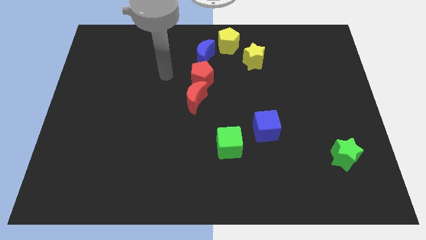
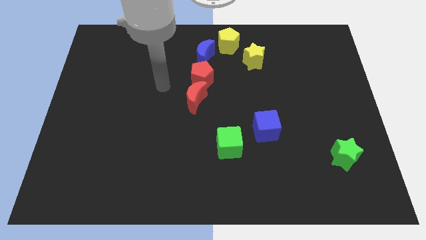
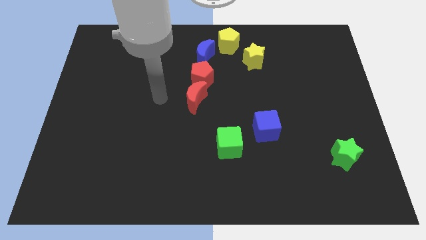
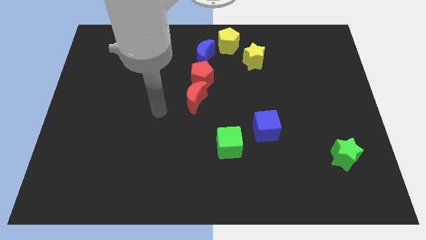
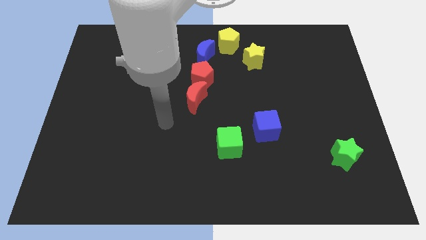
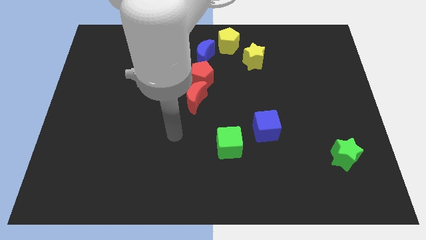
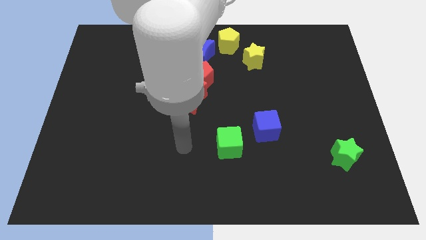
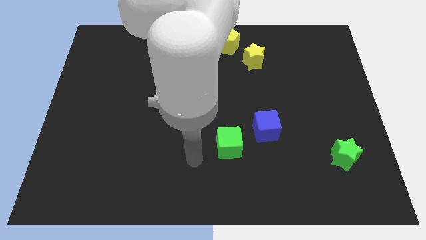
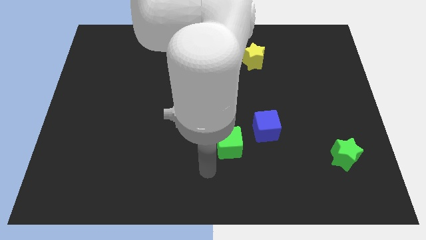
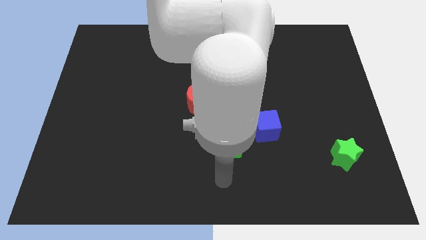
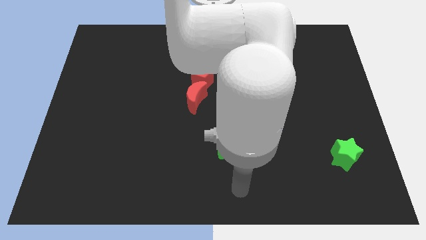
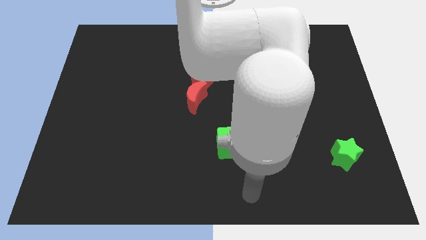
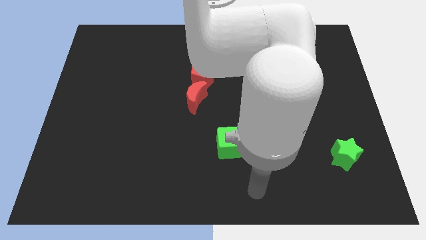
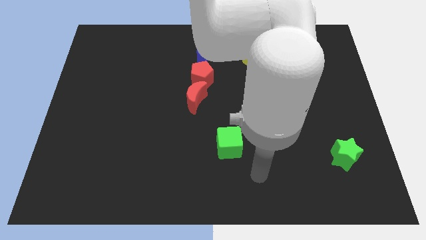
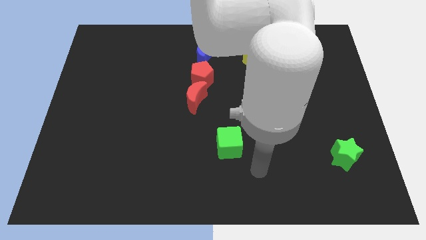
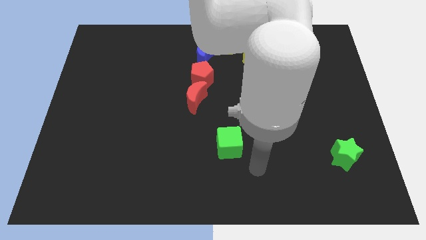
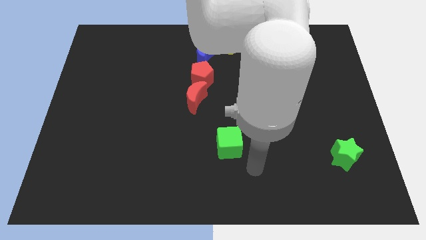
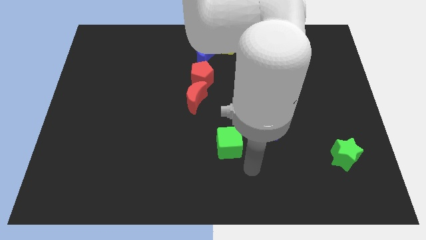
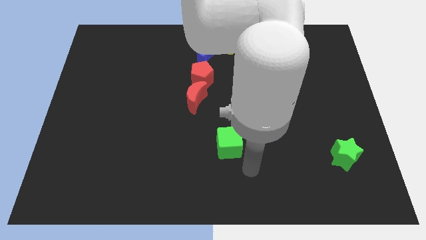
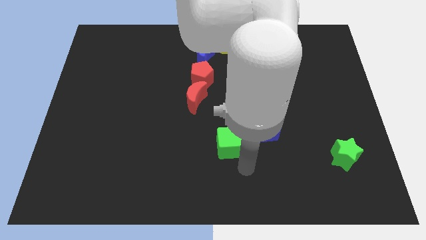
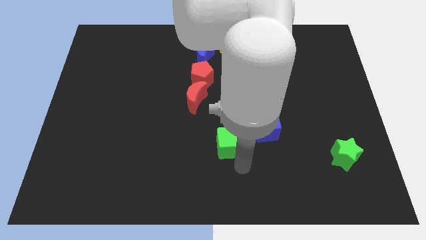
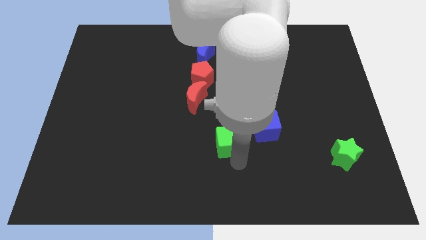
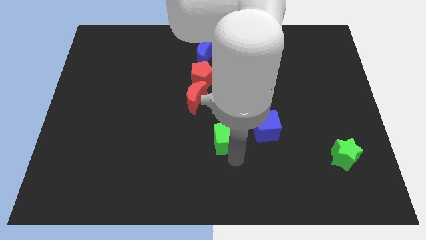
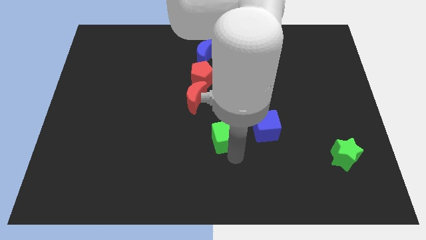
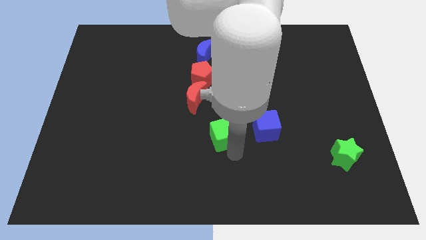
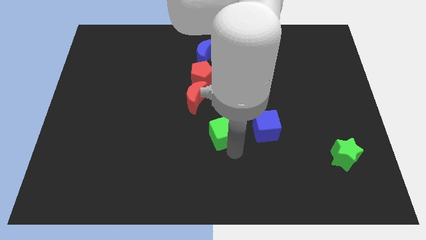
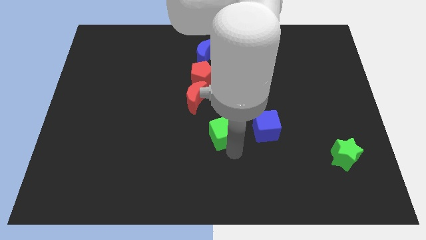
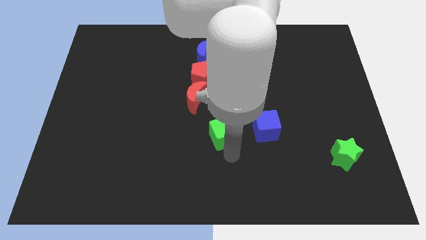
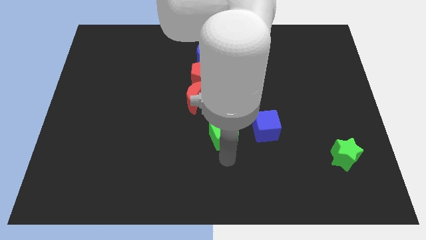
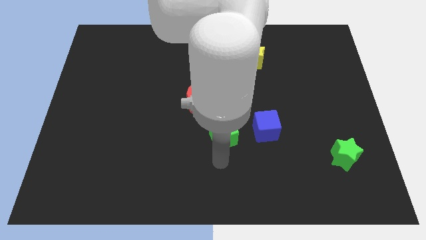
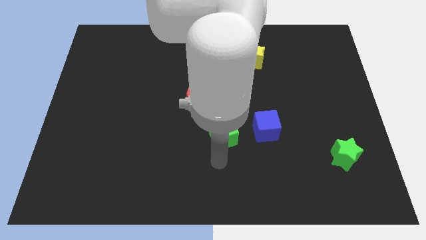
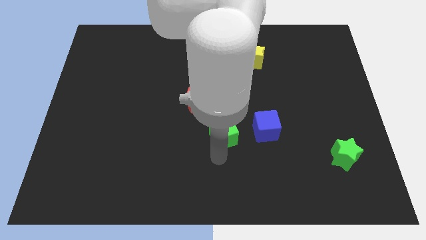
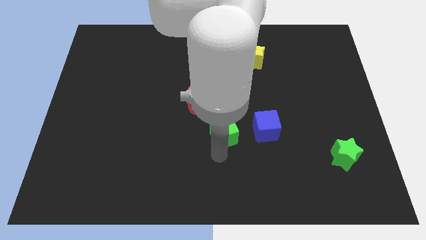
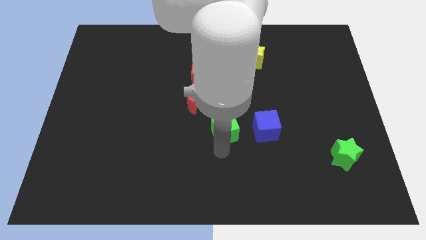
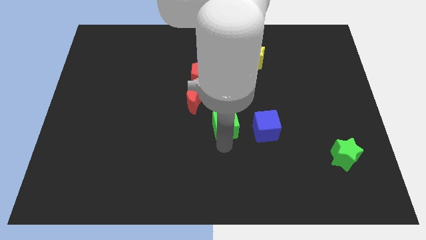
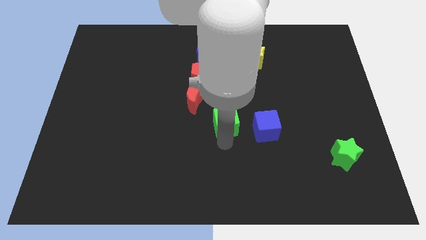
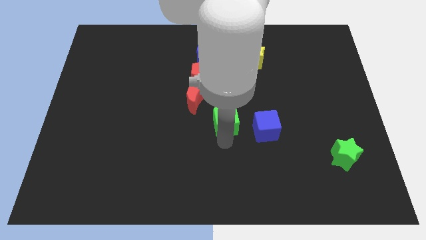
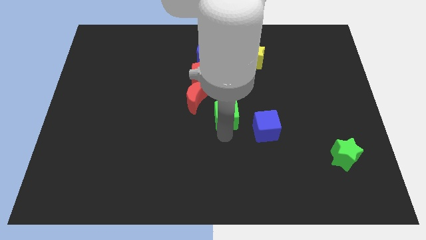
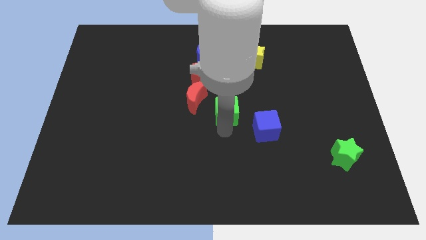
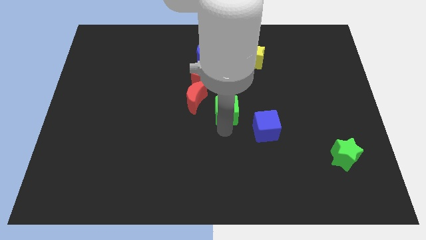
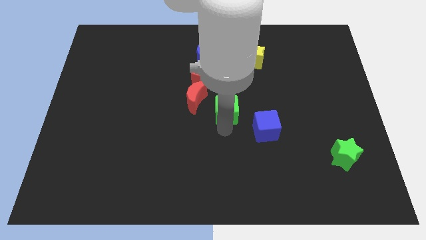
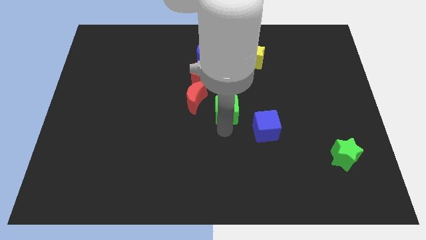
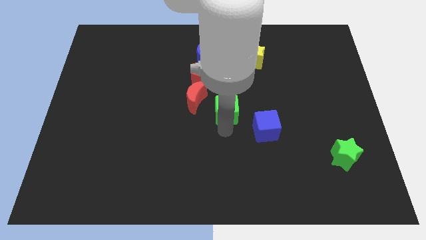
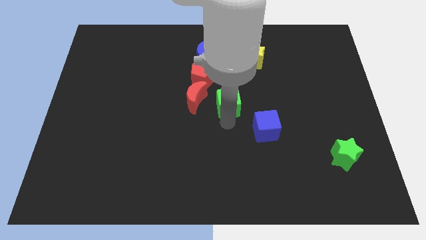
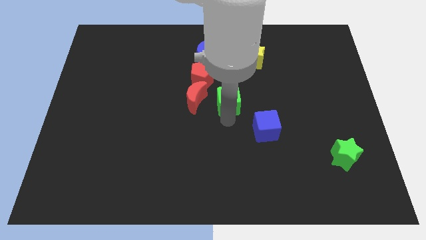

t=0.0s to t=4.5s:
place the green square diagonally to the blue square

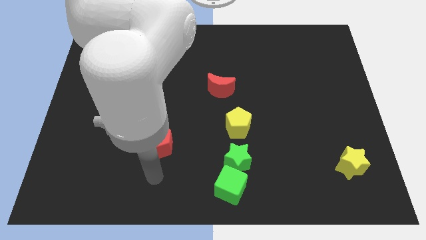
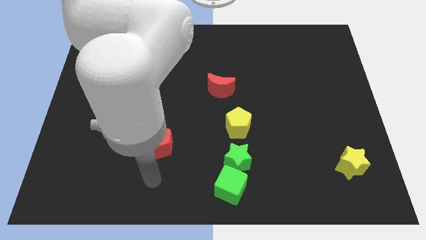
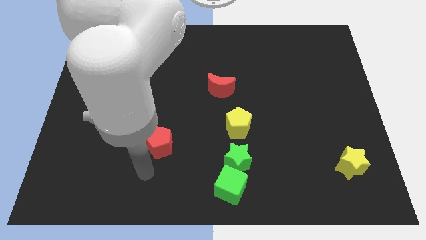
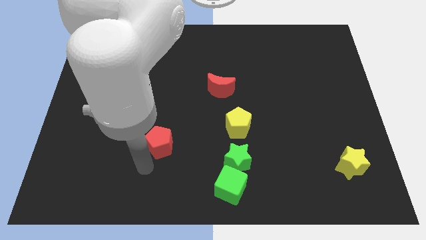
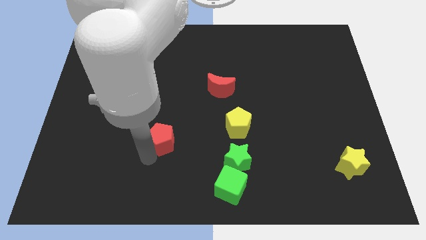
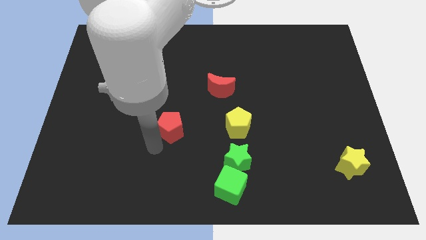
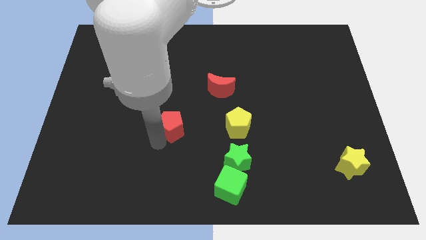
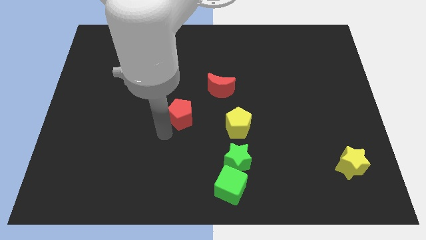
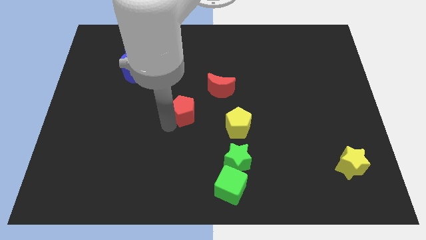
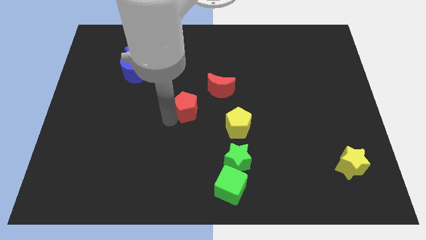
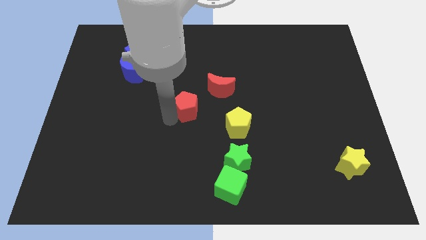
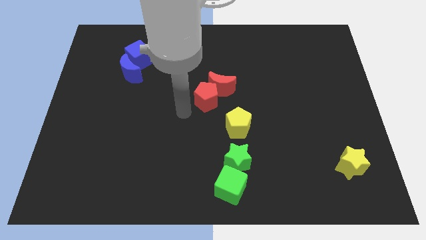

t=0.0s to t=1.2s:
move the red pentagon towards the red crescent

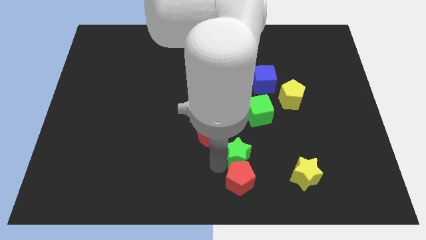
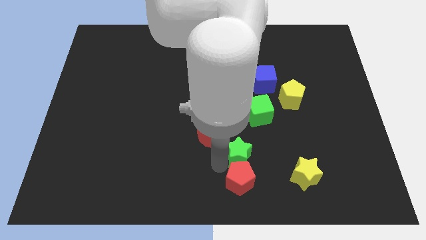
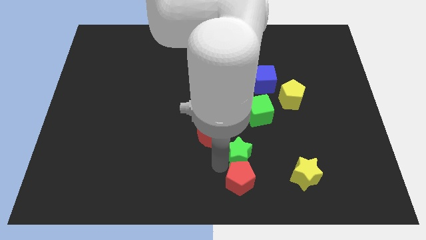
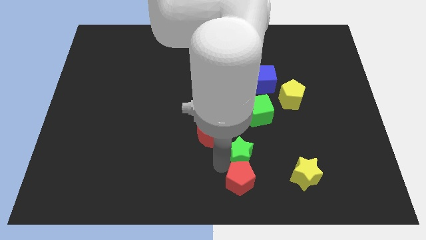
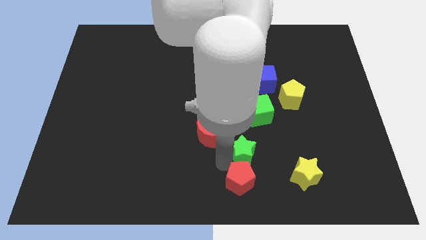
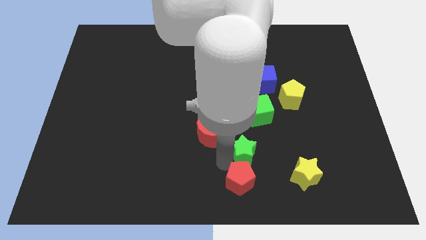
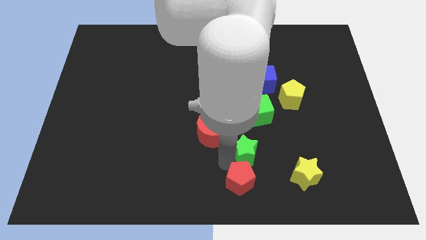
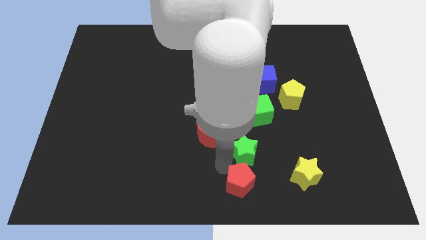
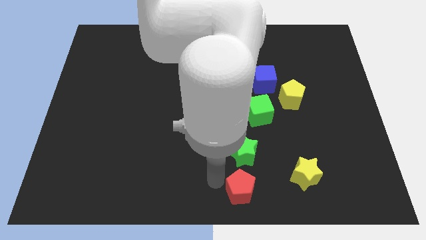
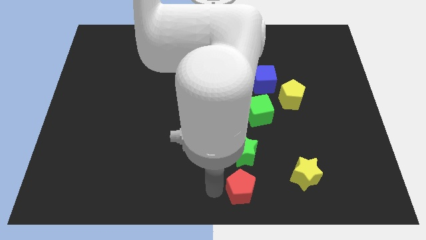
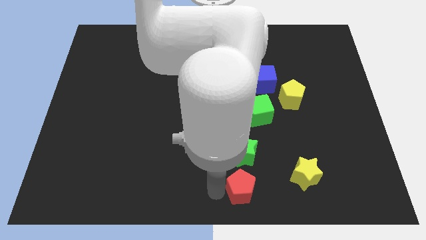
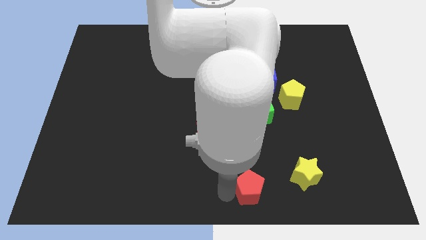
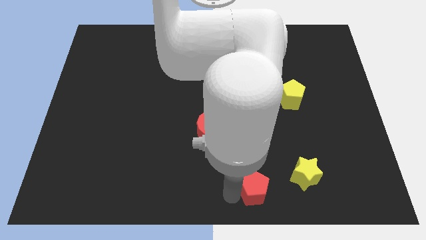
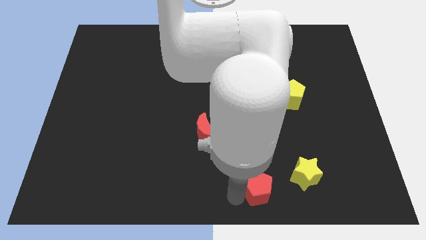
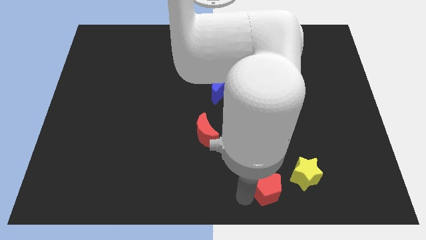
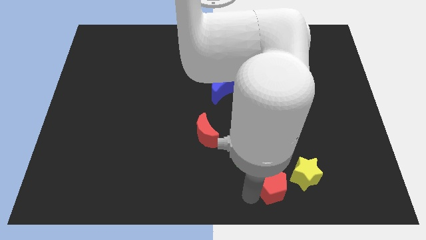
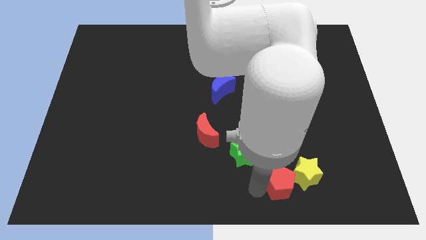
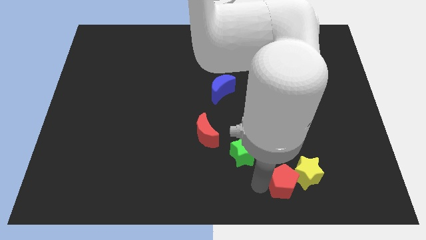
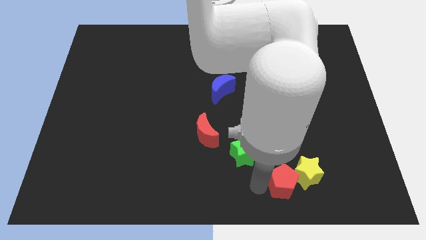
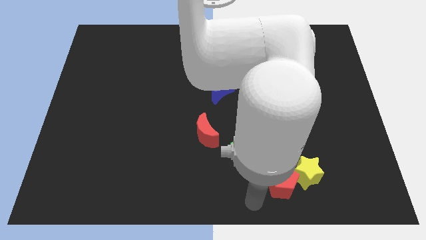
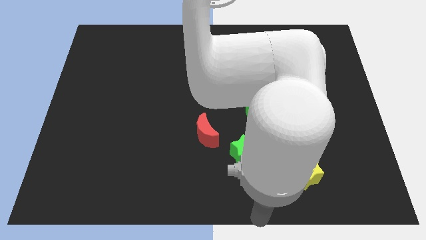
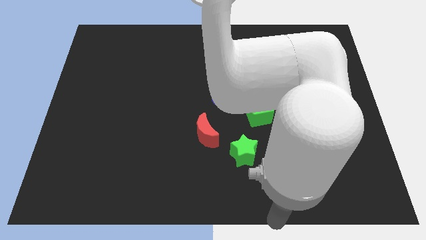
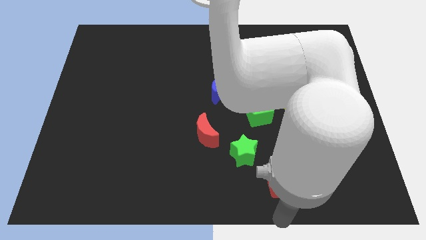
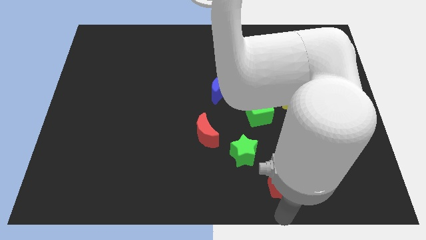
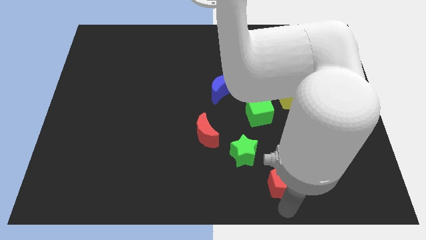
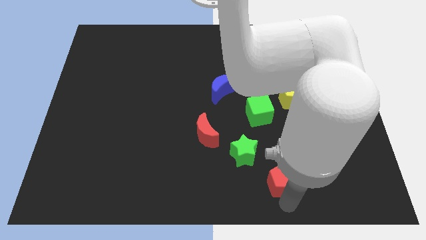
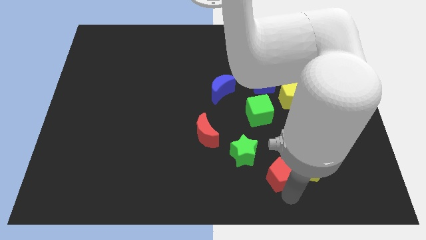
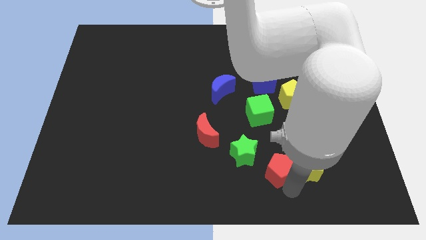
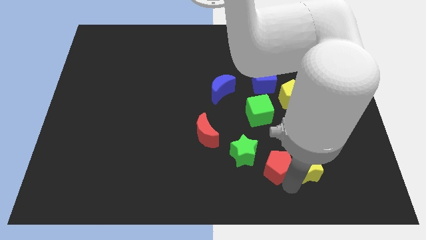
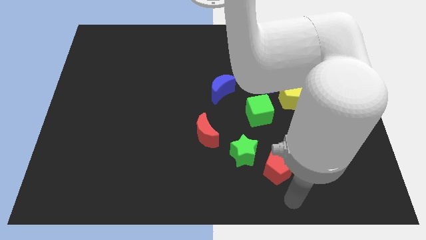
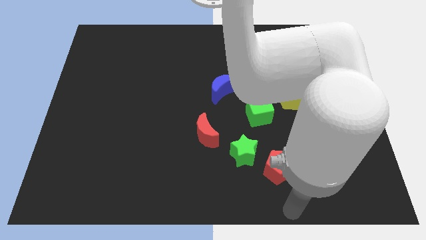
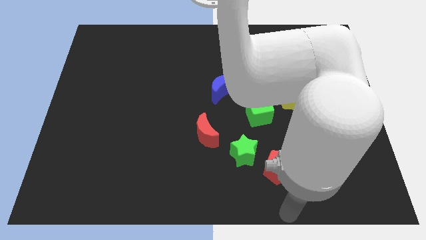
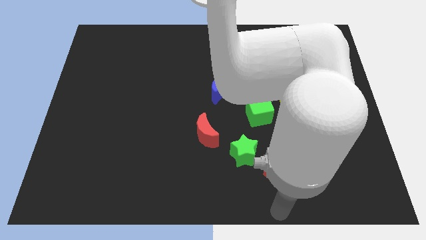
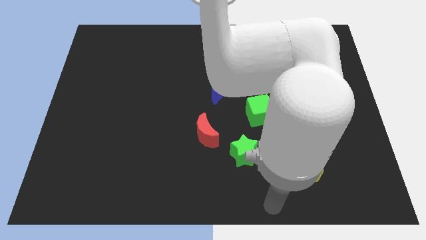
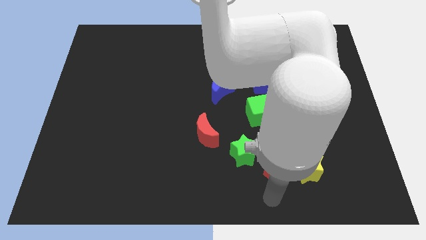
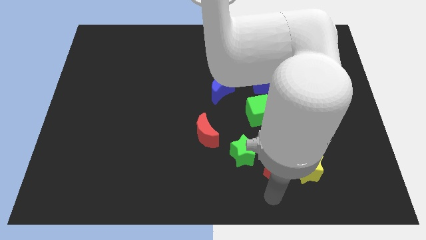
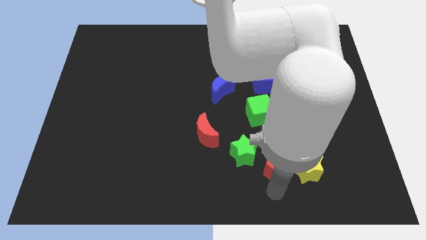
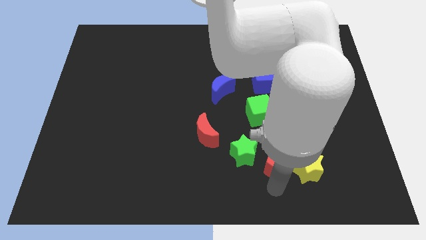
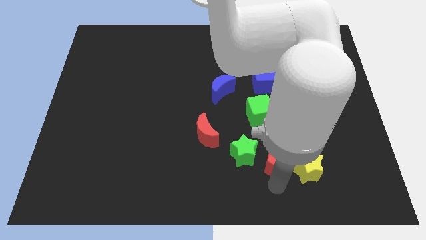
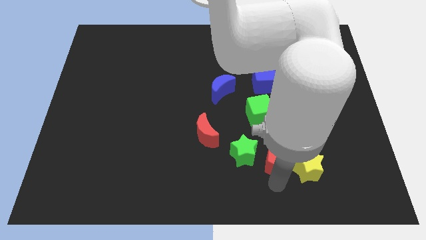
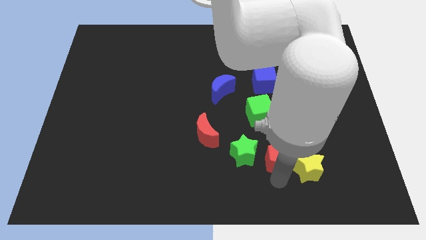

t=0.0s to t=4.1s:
place the red pentagon in between green star and yellow star
